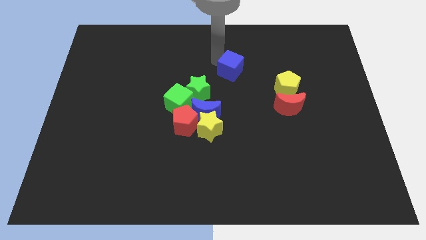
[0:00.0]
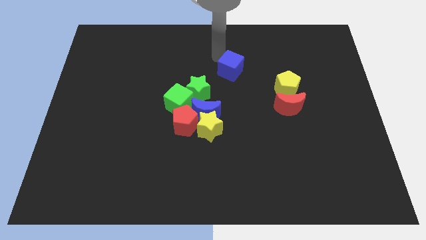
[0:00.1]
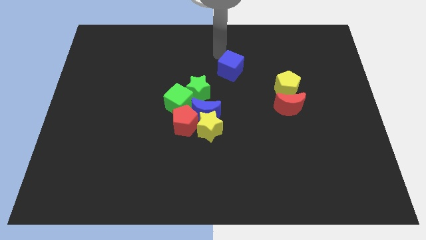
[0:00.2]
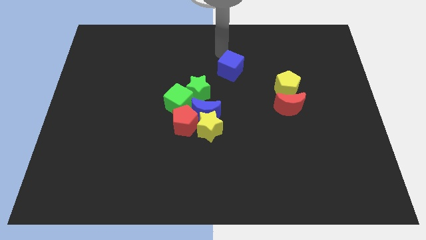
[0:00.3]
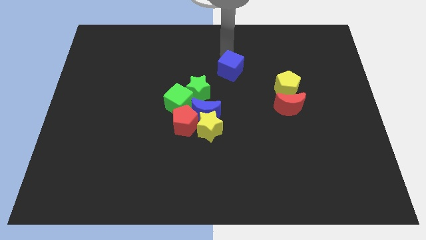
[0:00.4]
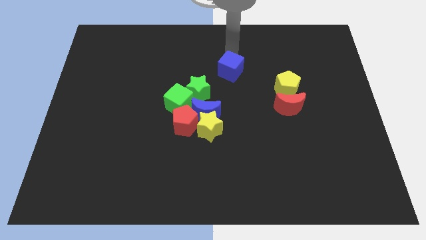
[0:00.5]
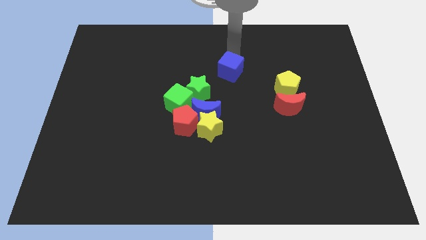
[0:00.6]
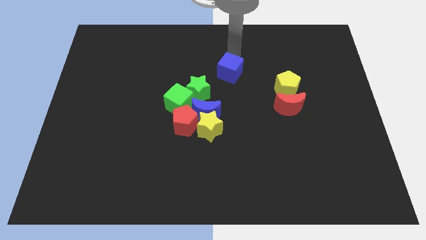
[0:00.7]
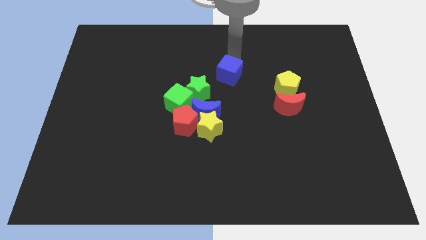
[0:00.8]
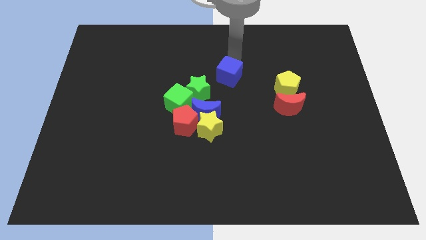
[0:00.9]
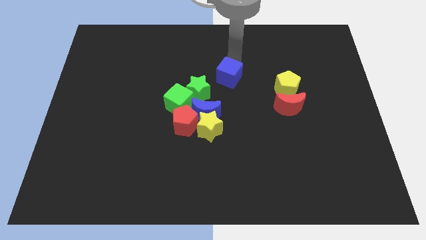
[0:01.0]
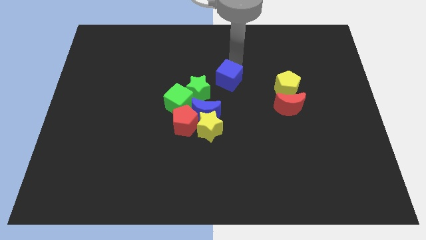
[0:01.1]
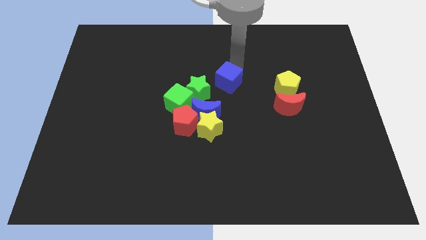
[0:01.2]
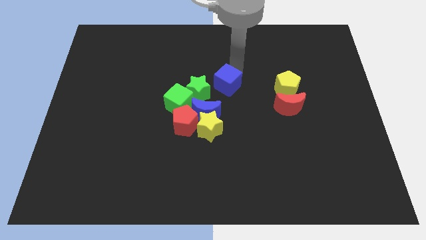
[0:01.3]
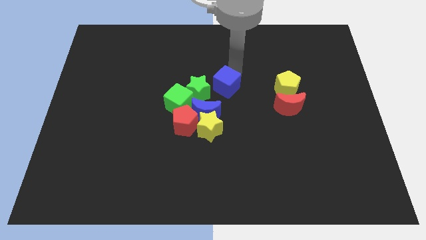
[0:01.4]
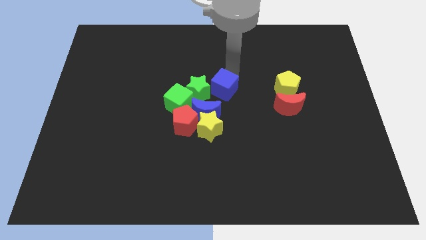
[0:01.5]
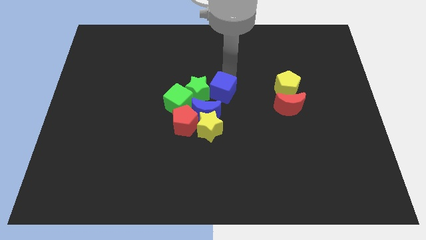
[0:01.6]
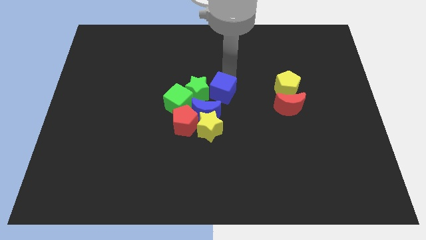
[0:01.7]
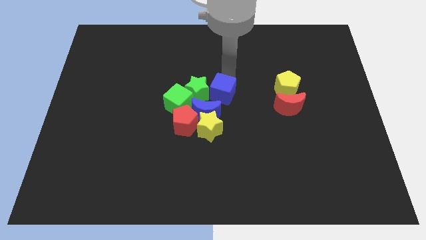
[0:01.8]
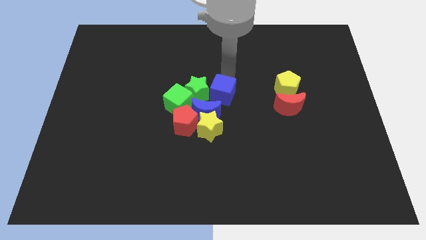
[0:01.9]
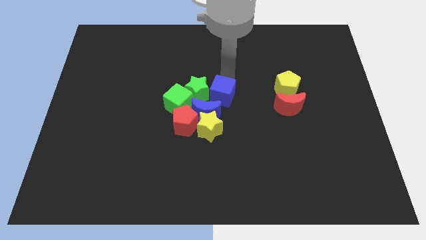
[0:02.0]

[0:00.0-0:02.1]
move the blue cube towards the right side of green star

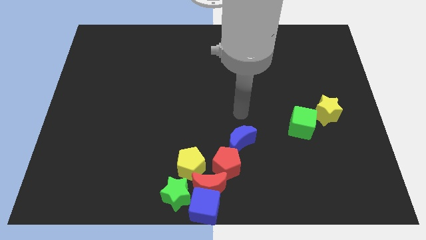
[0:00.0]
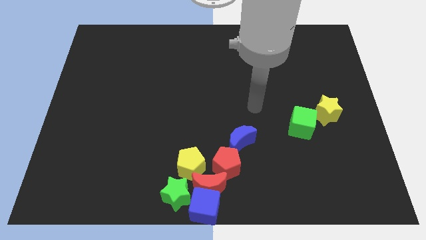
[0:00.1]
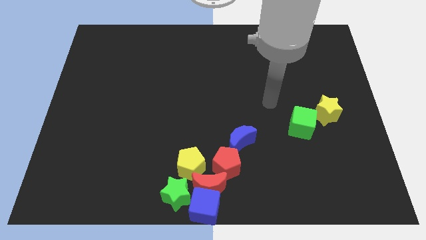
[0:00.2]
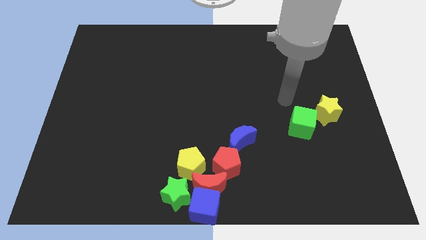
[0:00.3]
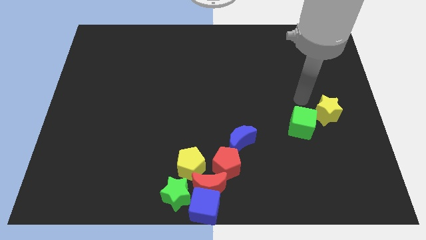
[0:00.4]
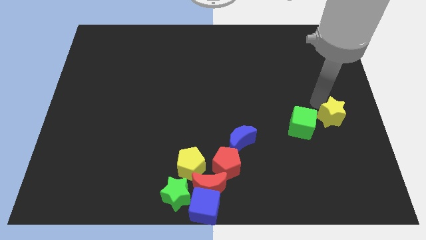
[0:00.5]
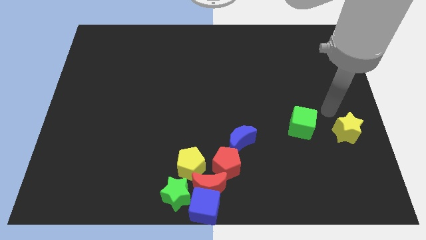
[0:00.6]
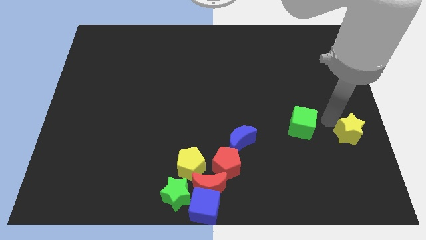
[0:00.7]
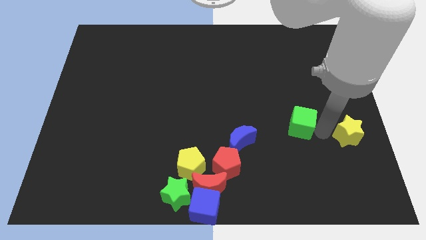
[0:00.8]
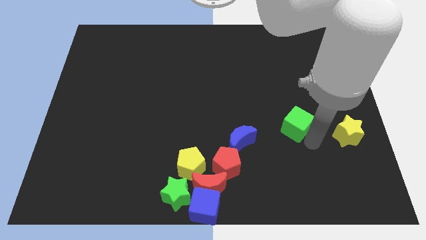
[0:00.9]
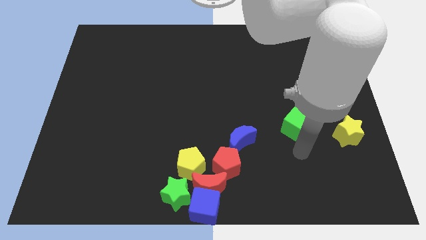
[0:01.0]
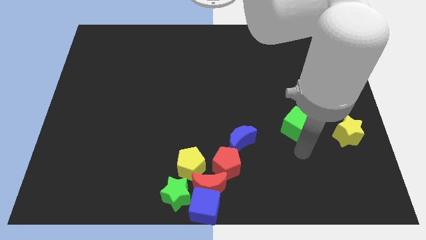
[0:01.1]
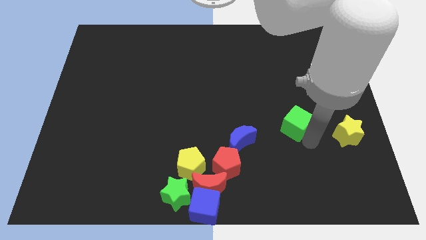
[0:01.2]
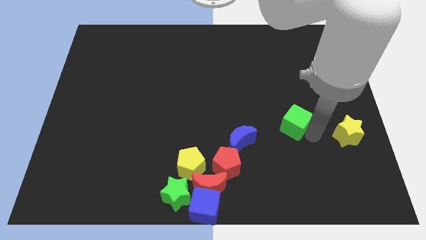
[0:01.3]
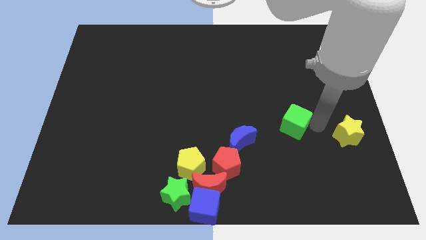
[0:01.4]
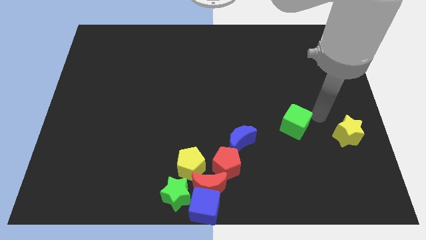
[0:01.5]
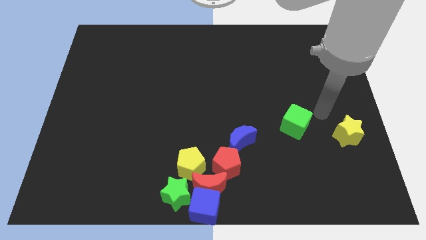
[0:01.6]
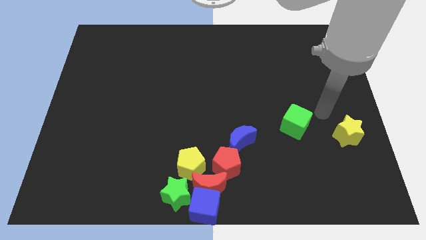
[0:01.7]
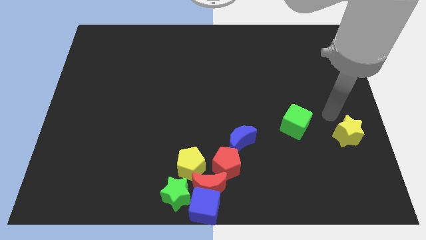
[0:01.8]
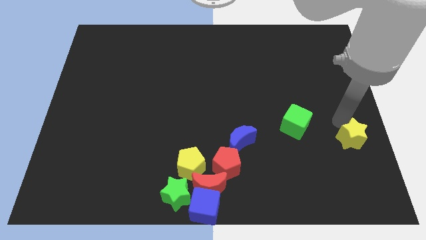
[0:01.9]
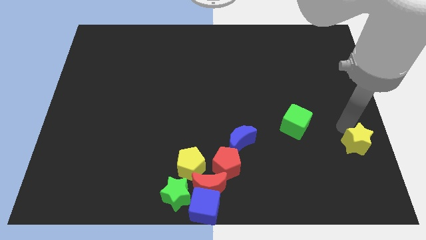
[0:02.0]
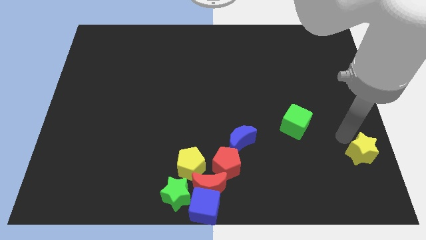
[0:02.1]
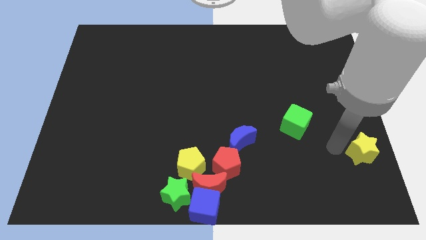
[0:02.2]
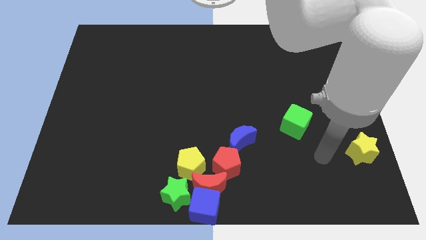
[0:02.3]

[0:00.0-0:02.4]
separate green cube and yellow star

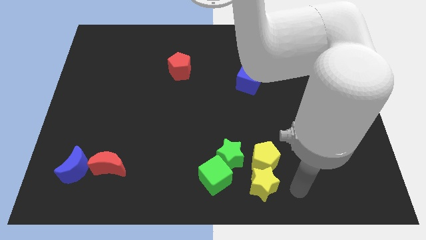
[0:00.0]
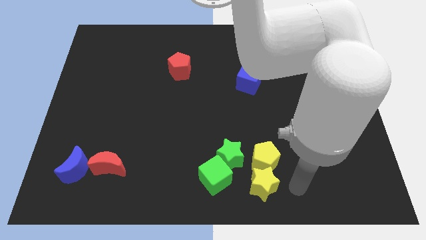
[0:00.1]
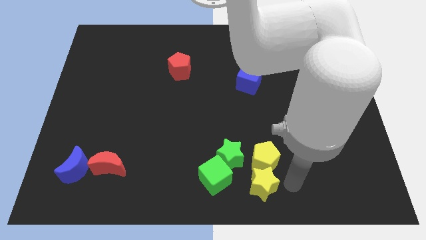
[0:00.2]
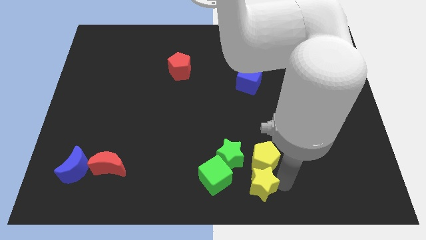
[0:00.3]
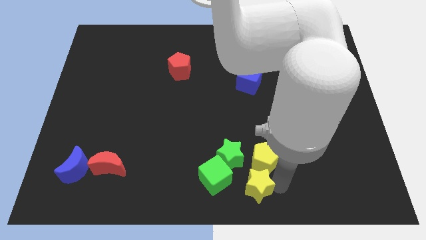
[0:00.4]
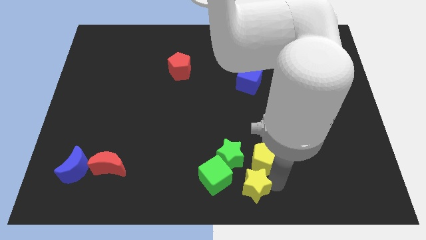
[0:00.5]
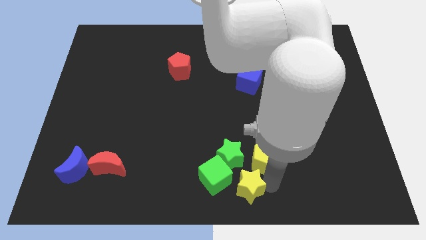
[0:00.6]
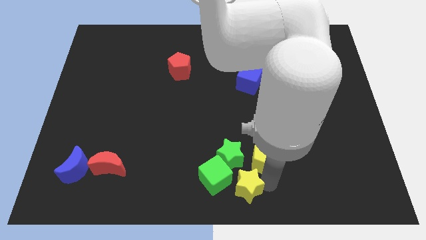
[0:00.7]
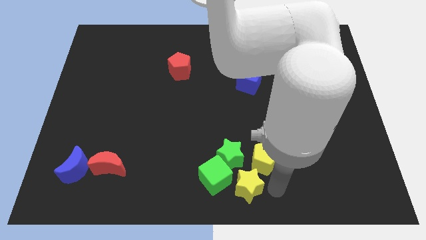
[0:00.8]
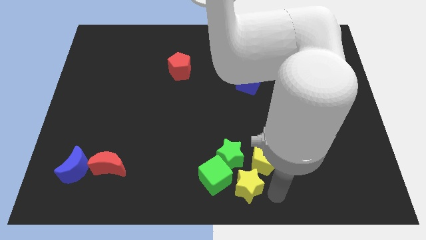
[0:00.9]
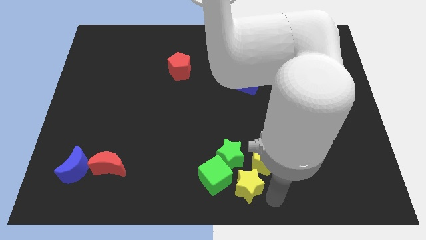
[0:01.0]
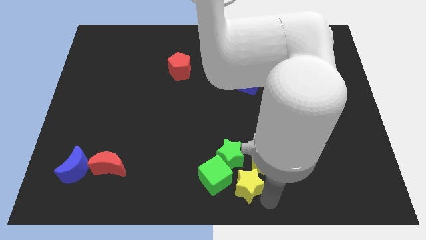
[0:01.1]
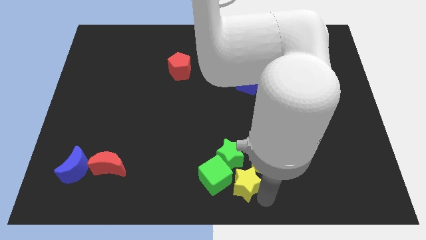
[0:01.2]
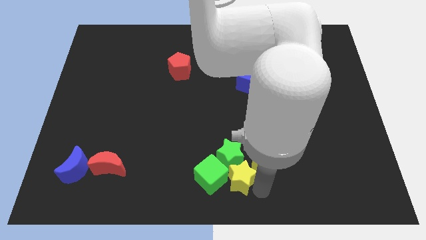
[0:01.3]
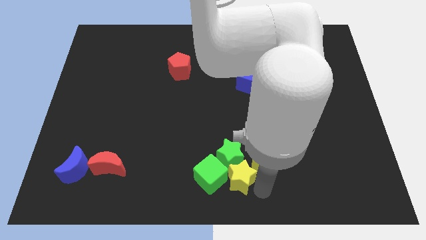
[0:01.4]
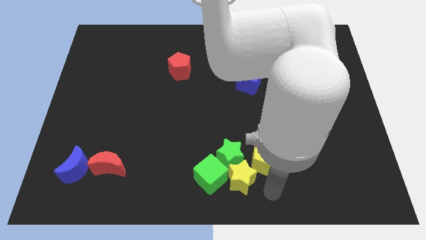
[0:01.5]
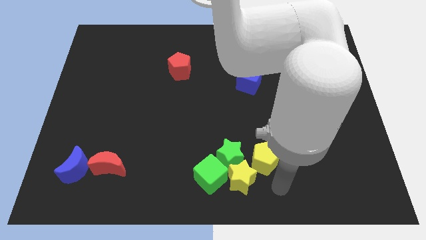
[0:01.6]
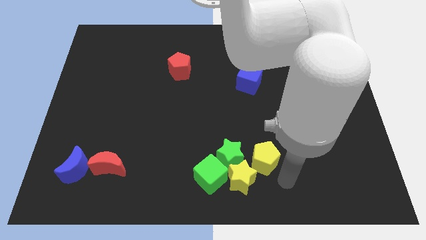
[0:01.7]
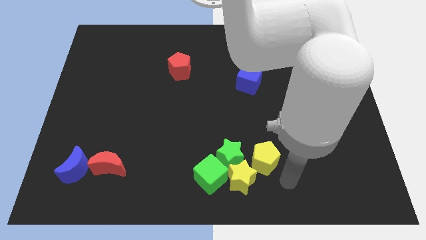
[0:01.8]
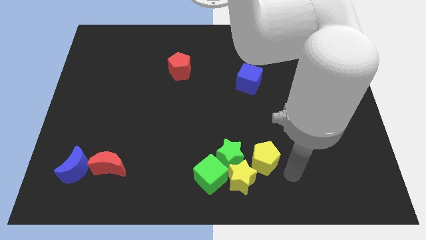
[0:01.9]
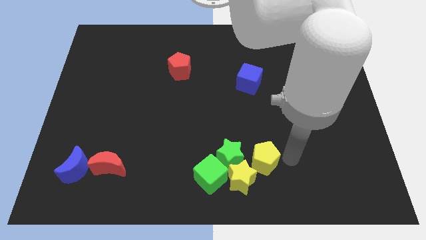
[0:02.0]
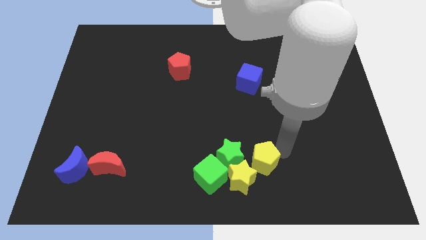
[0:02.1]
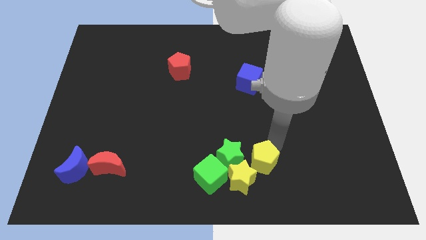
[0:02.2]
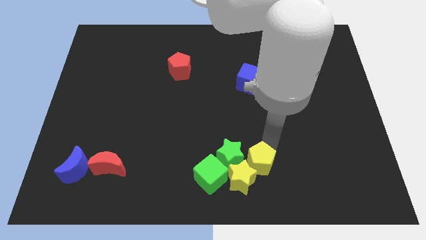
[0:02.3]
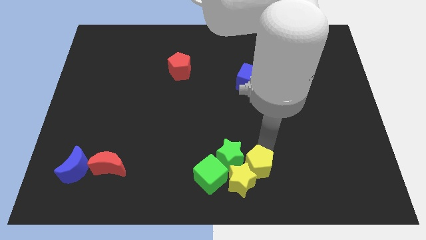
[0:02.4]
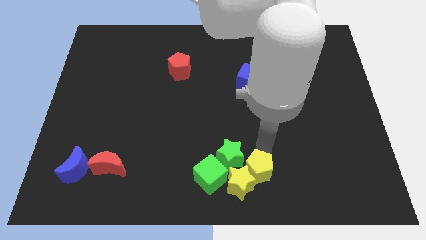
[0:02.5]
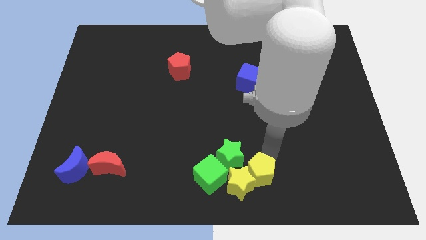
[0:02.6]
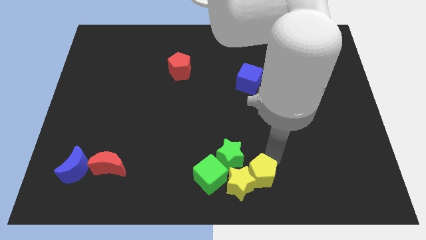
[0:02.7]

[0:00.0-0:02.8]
push the yellow blocks towards the green blocks

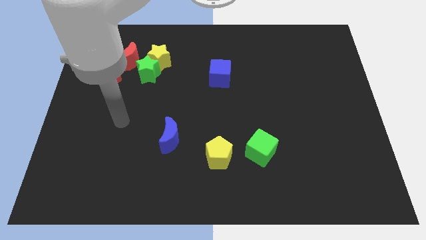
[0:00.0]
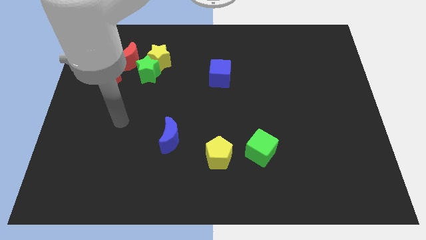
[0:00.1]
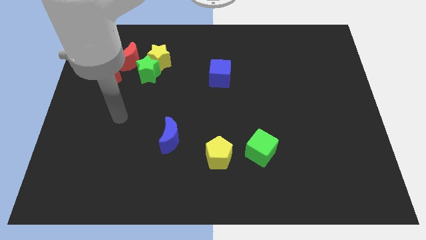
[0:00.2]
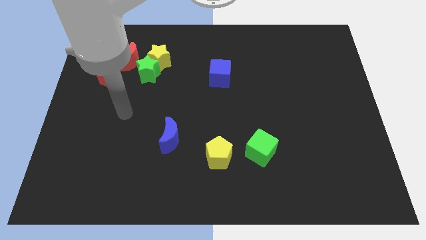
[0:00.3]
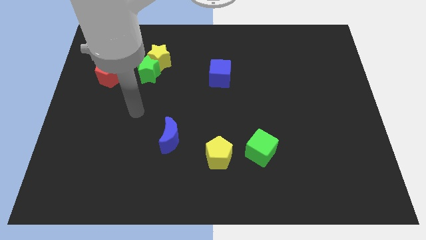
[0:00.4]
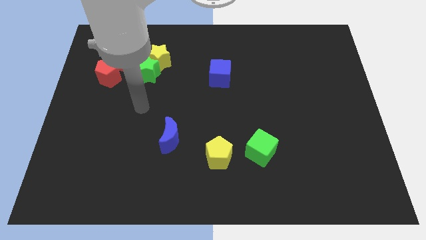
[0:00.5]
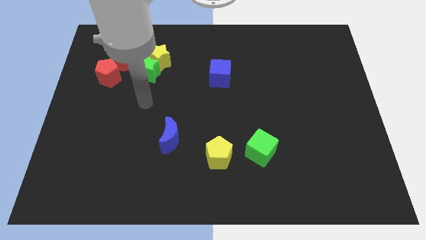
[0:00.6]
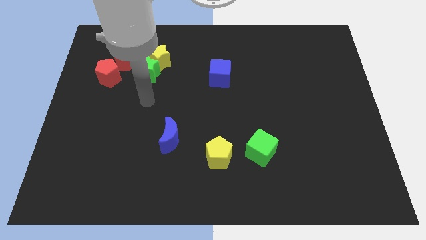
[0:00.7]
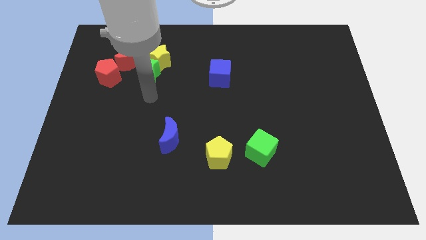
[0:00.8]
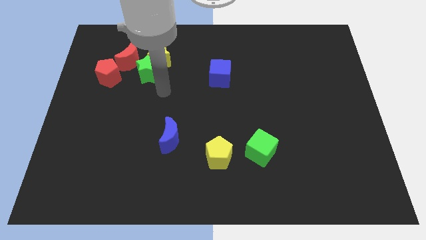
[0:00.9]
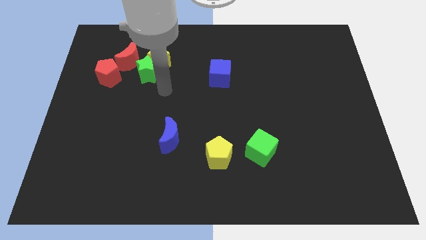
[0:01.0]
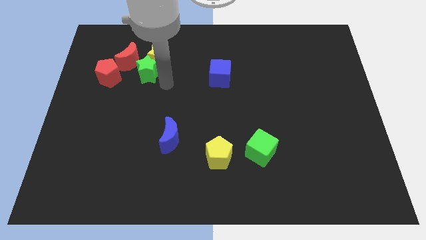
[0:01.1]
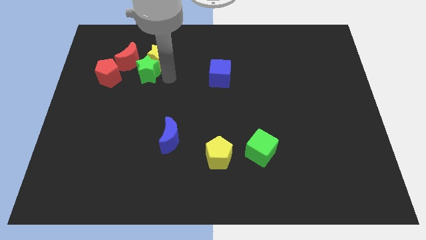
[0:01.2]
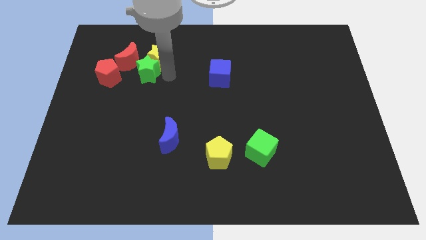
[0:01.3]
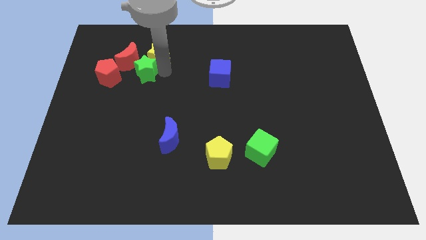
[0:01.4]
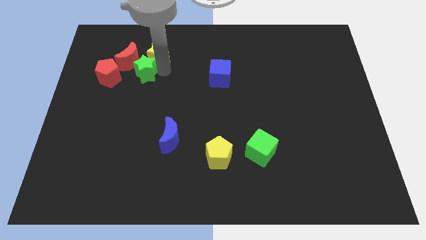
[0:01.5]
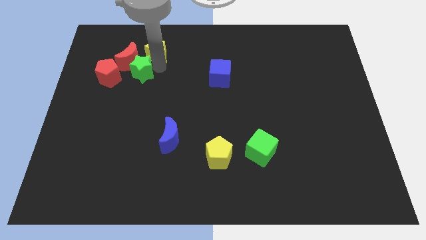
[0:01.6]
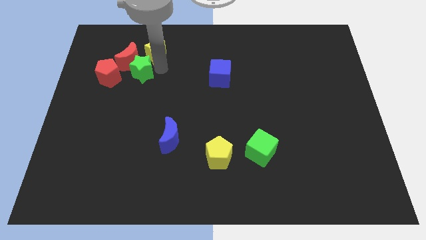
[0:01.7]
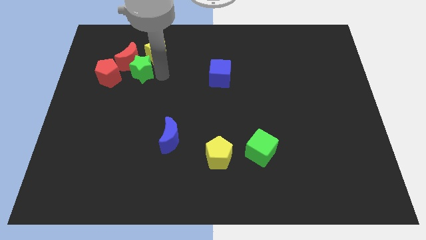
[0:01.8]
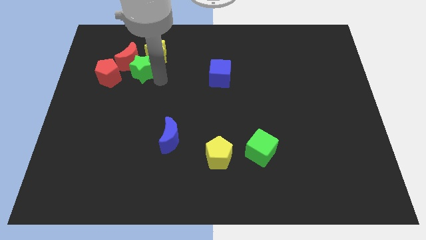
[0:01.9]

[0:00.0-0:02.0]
push yellow star slightly up
